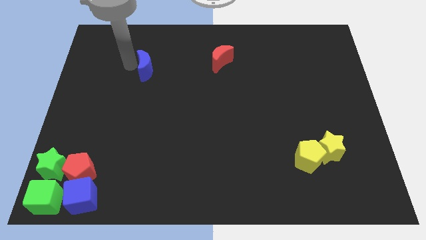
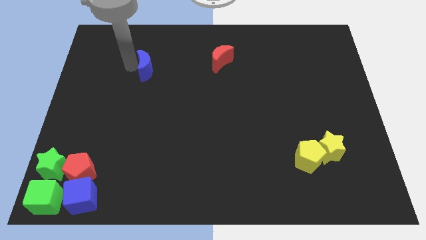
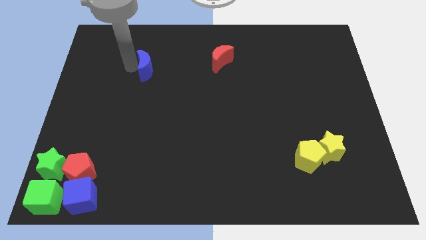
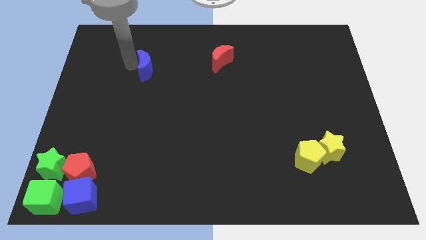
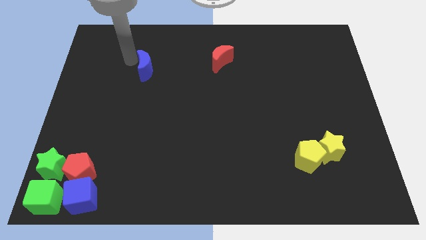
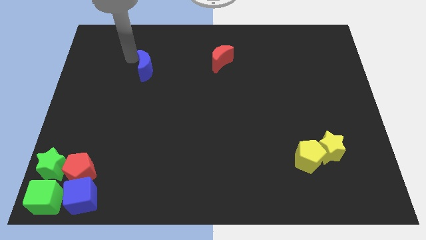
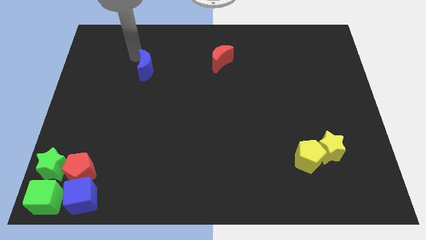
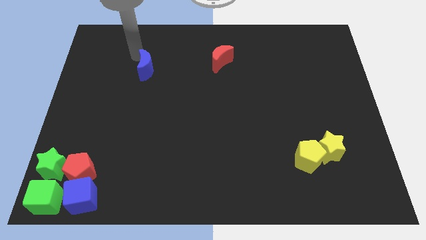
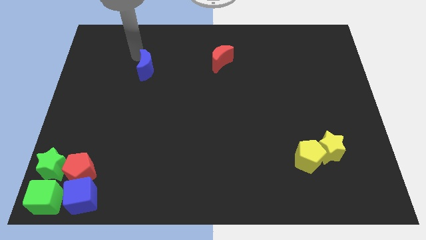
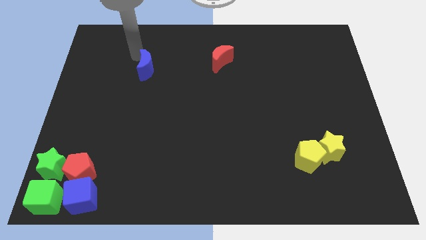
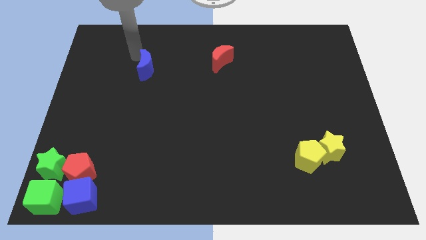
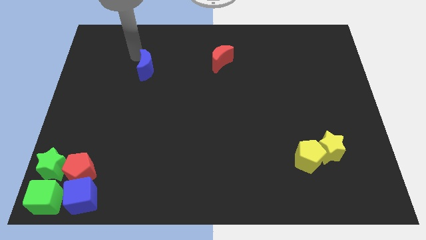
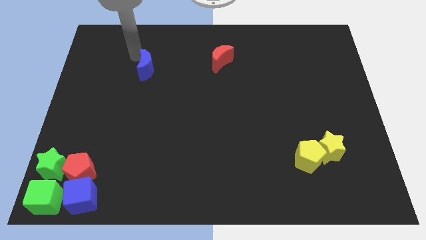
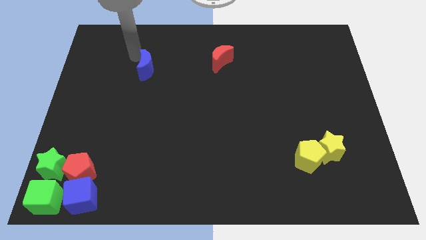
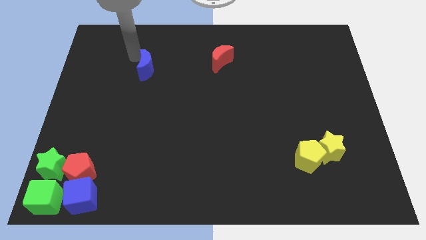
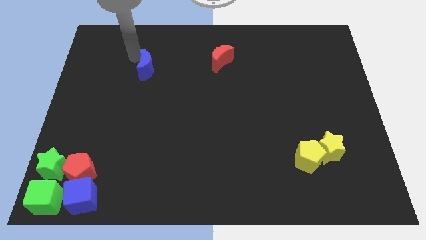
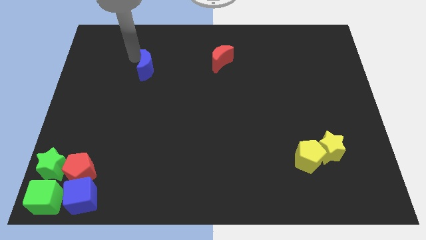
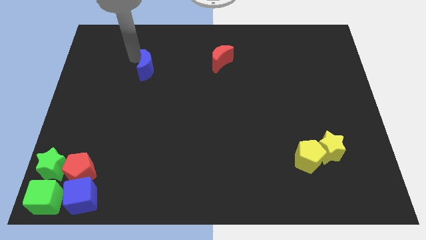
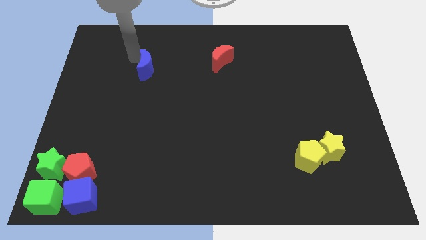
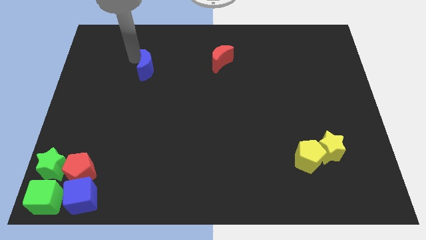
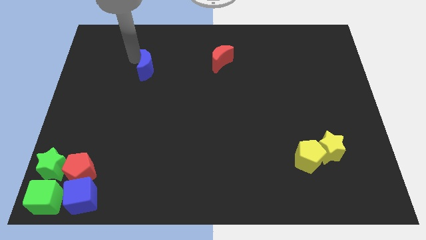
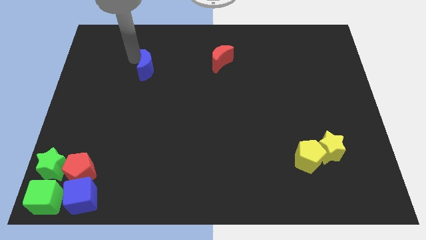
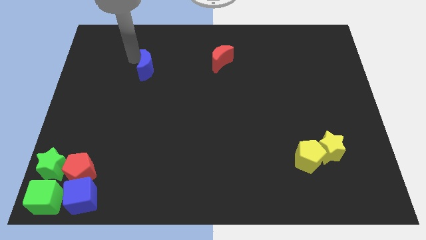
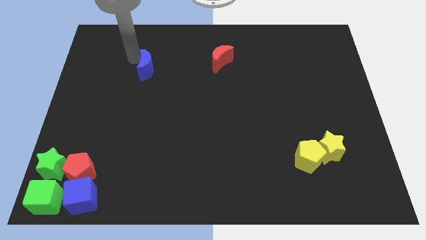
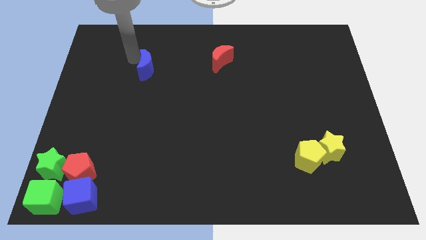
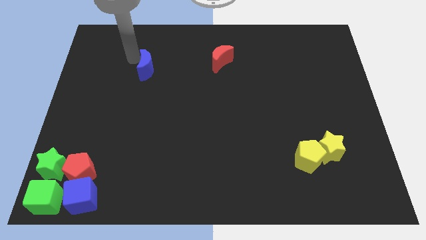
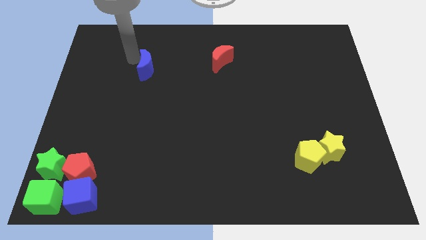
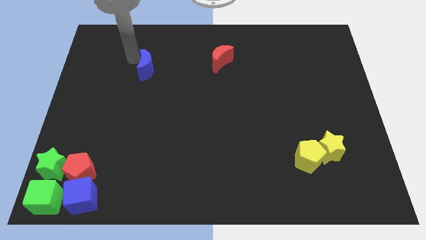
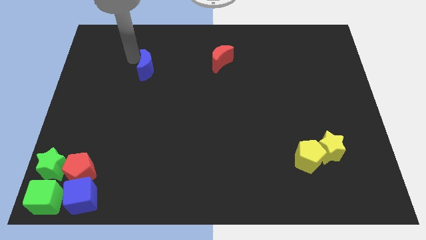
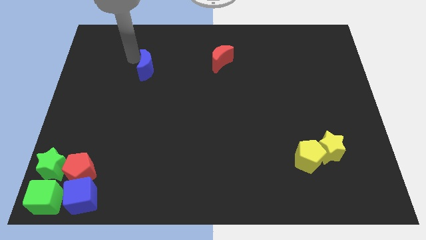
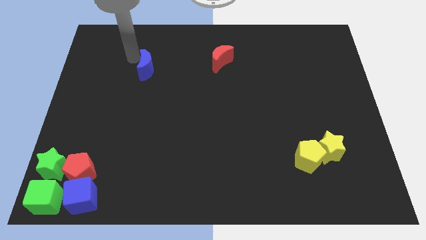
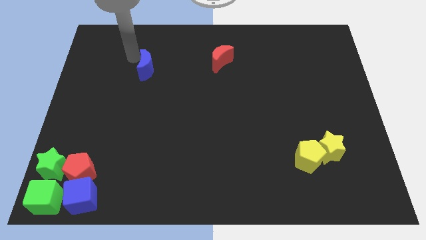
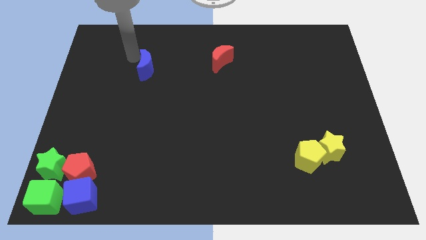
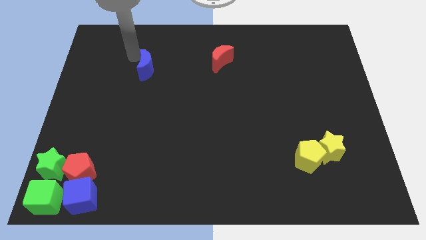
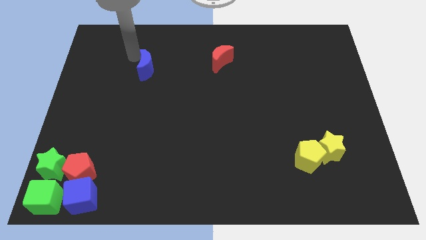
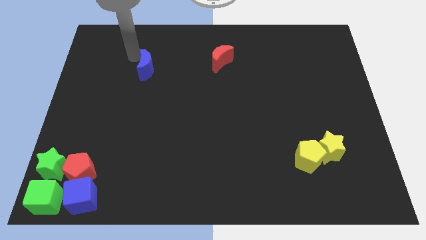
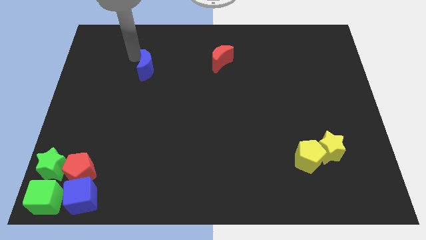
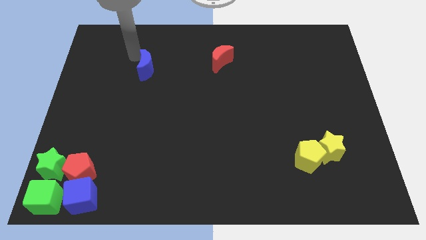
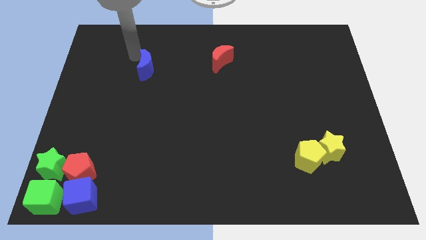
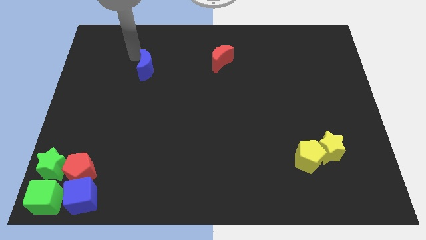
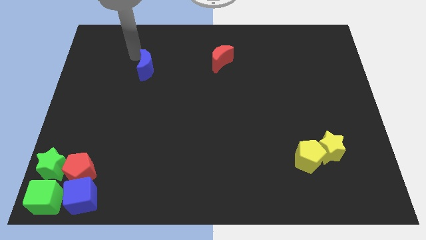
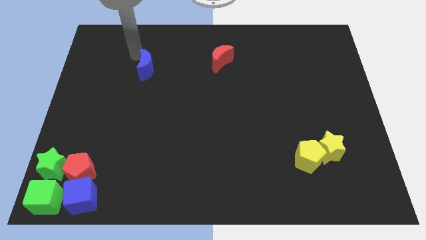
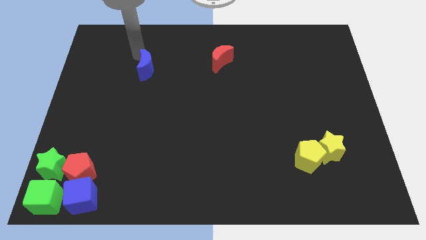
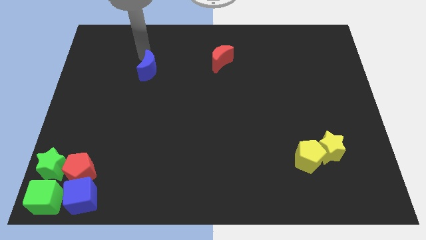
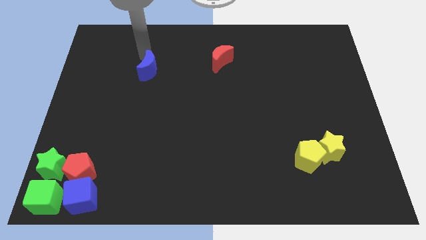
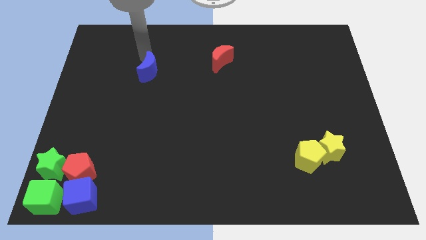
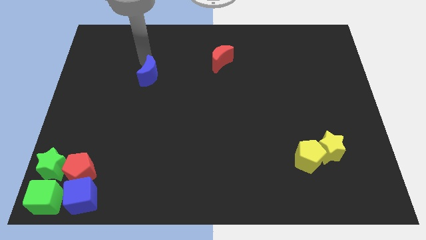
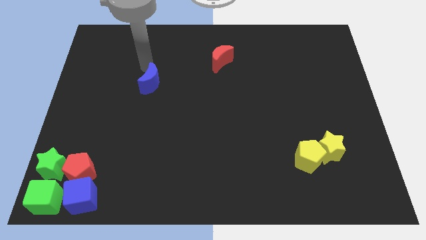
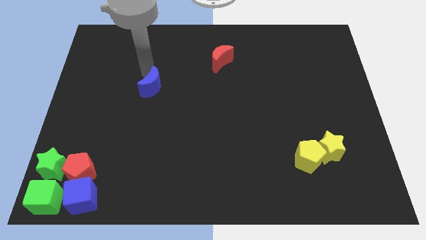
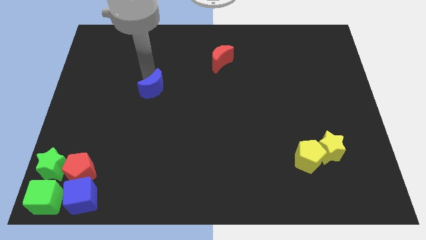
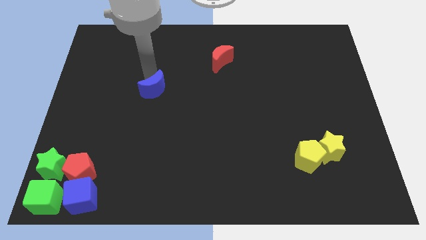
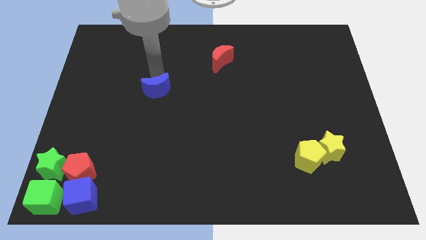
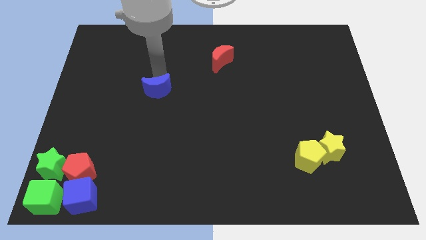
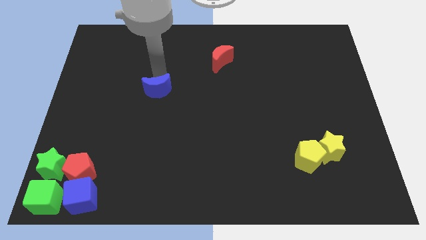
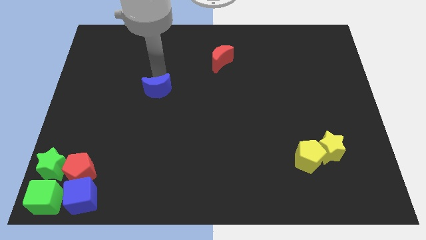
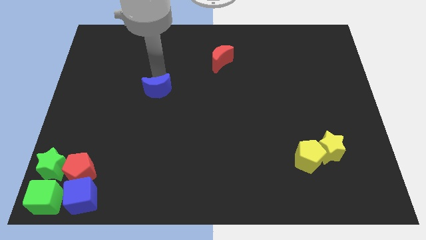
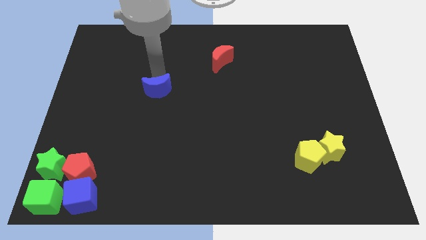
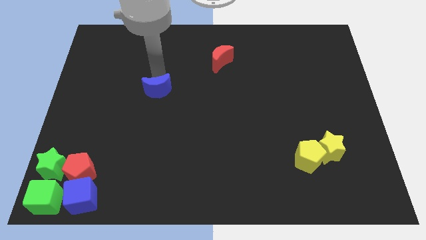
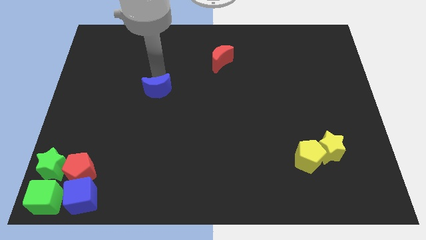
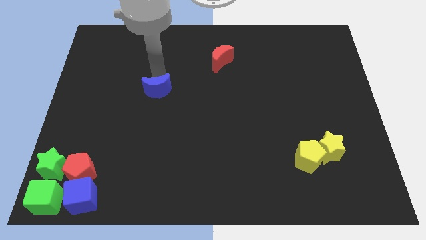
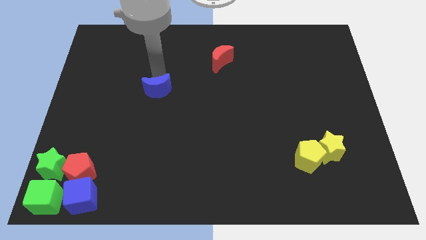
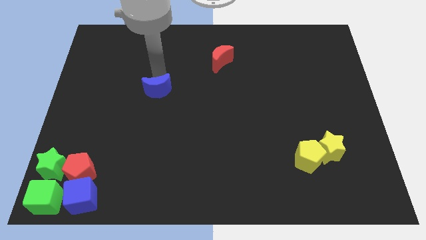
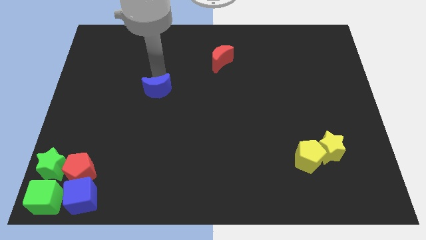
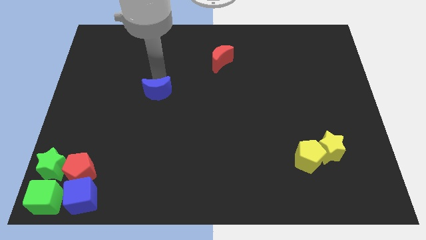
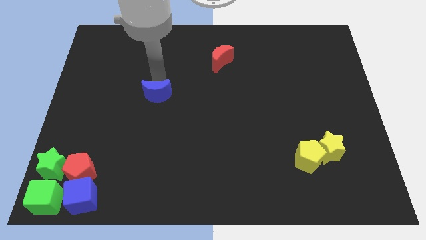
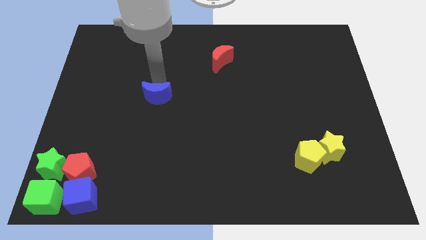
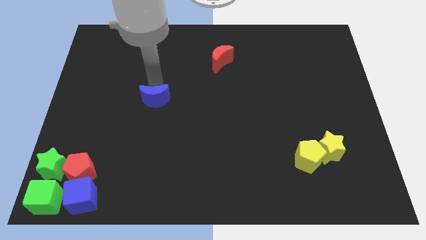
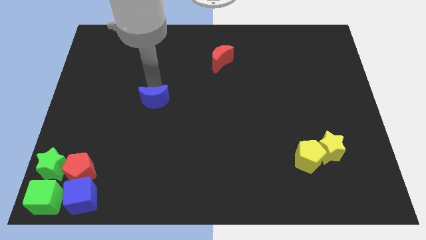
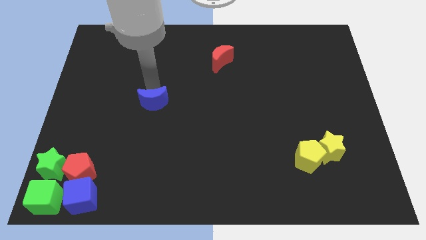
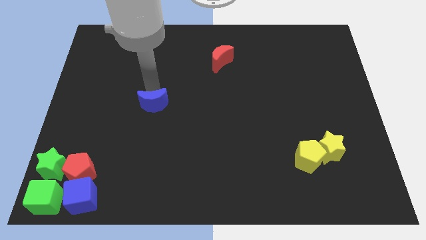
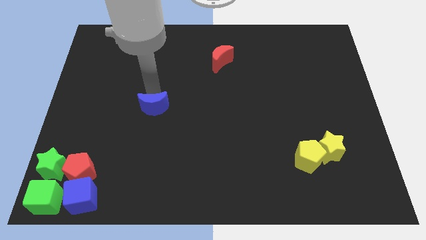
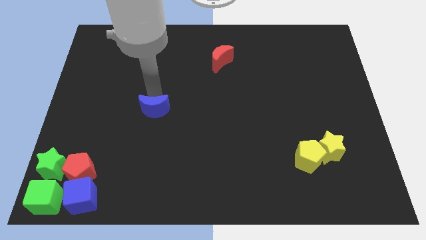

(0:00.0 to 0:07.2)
place the blue crescent in between red pentagon and red crescent

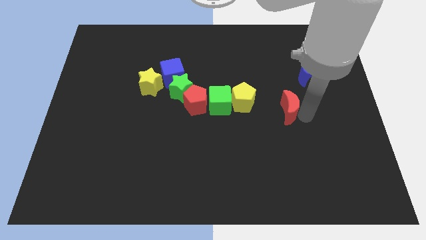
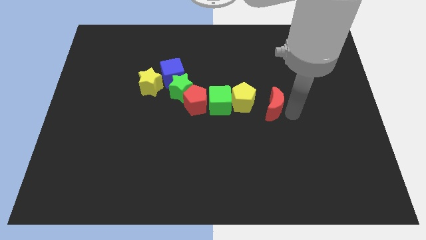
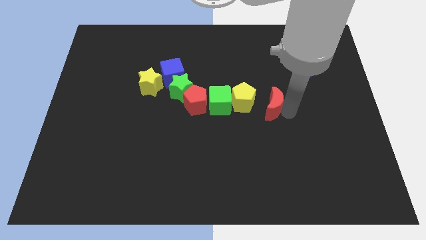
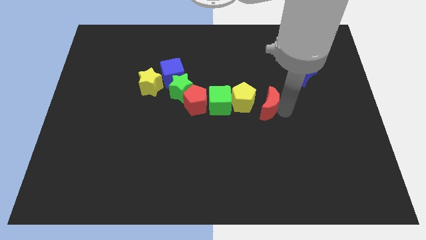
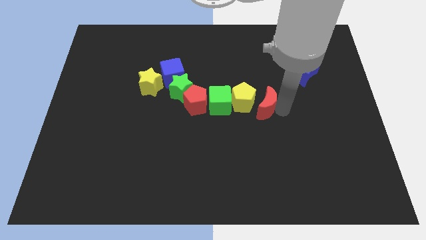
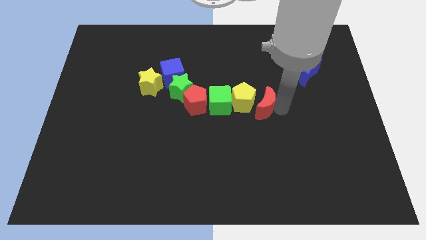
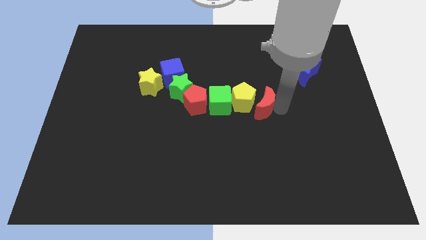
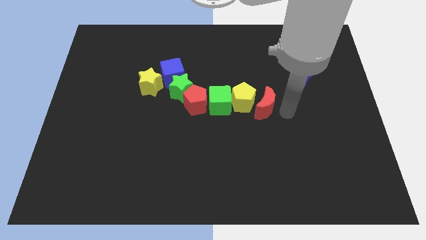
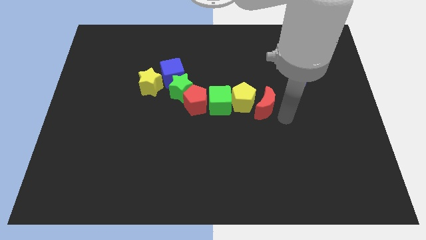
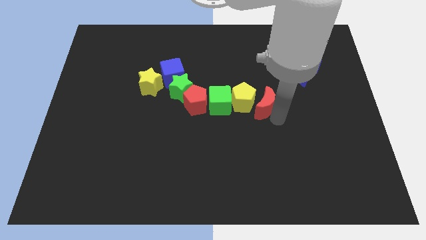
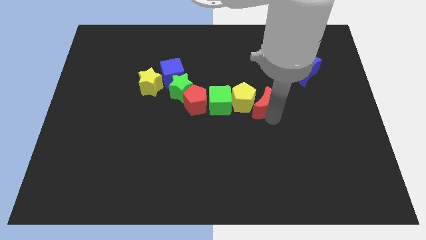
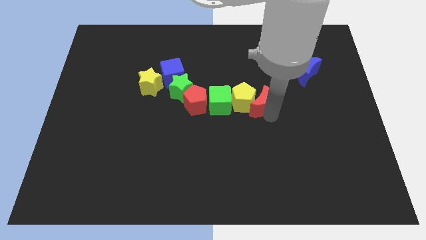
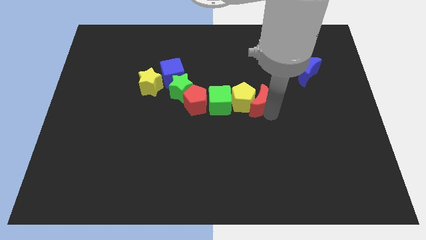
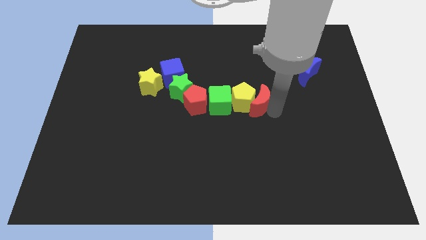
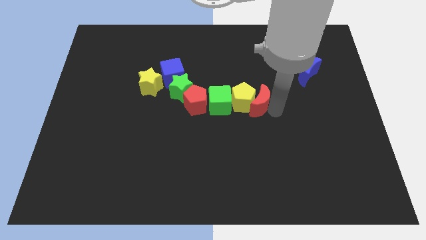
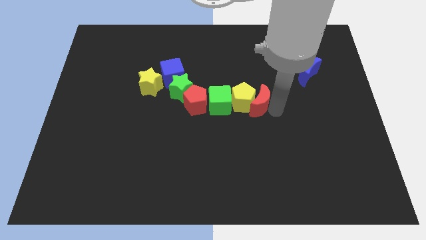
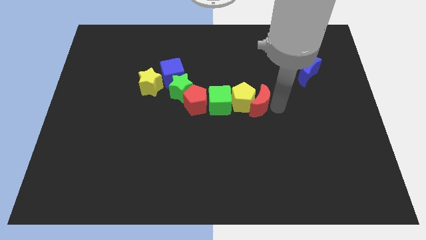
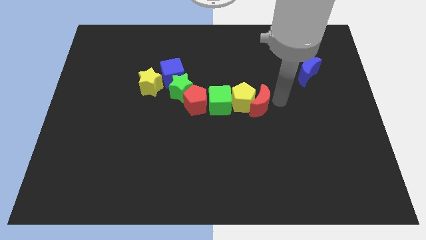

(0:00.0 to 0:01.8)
push the red moon into the yellow pentagon
